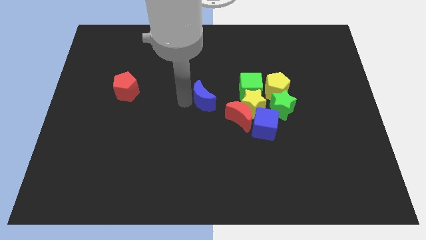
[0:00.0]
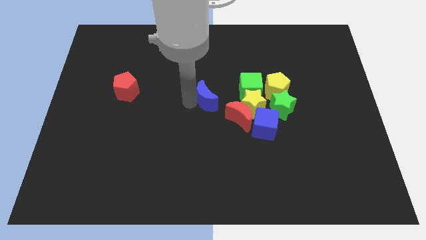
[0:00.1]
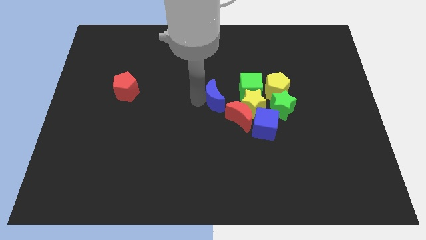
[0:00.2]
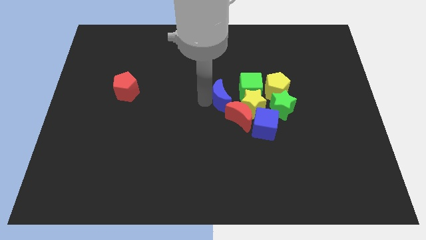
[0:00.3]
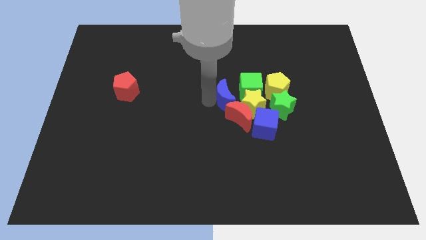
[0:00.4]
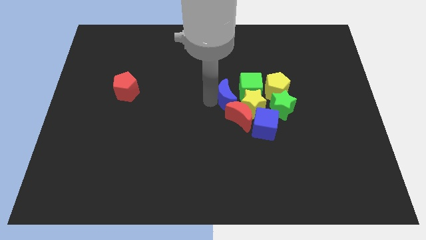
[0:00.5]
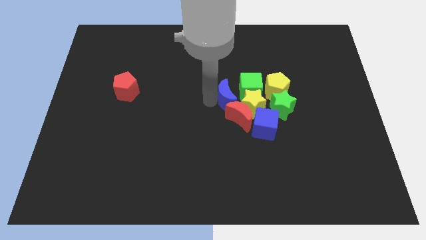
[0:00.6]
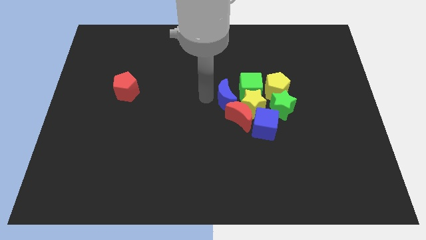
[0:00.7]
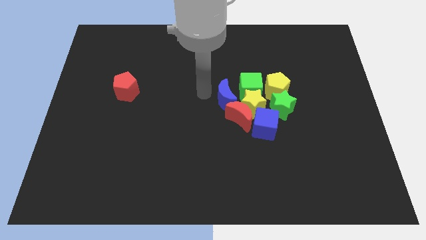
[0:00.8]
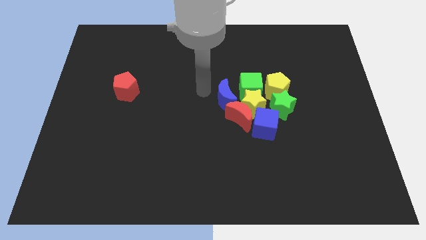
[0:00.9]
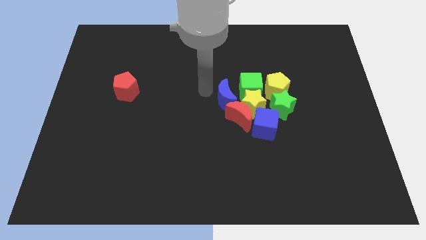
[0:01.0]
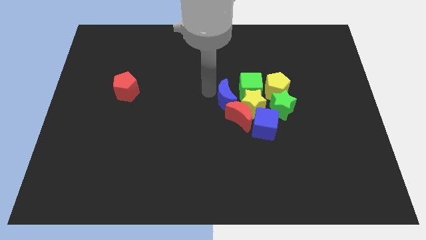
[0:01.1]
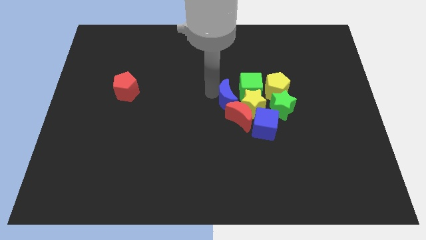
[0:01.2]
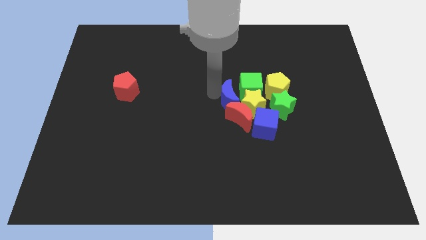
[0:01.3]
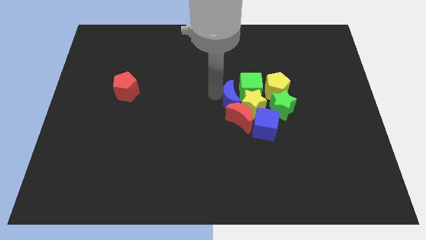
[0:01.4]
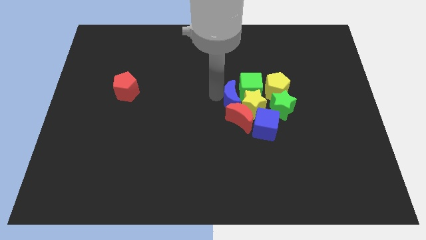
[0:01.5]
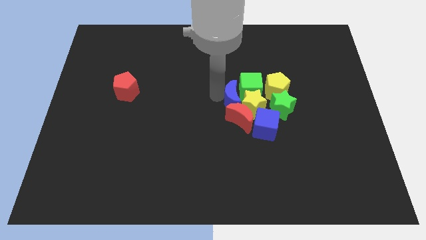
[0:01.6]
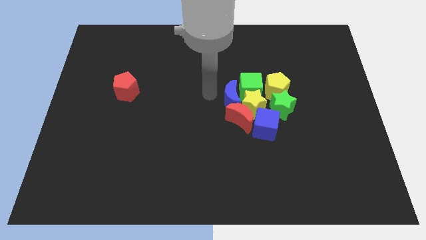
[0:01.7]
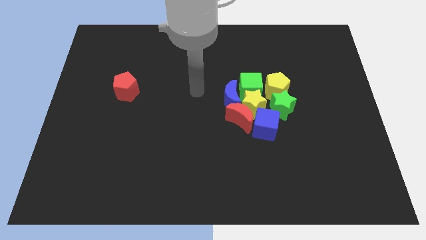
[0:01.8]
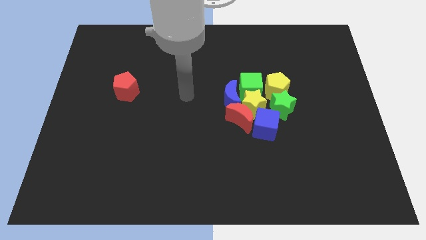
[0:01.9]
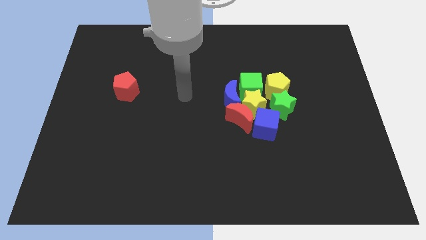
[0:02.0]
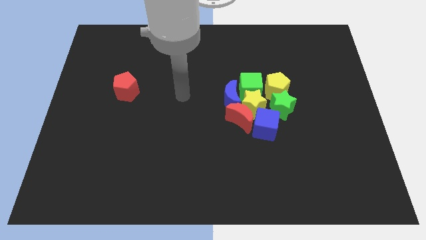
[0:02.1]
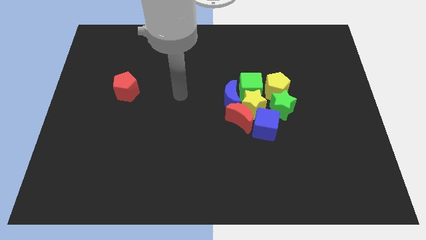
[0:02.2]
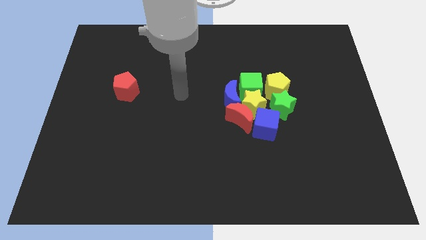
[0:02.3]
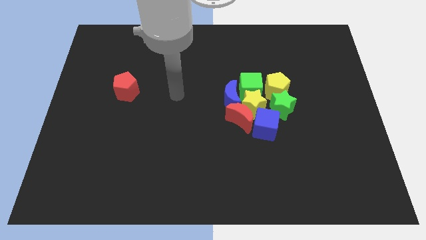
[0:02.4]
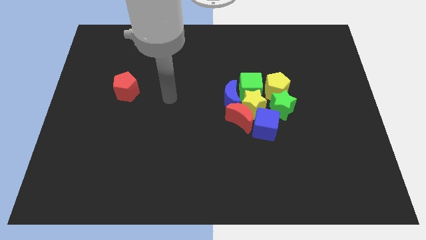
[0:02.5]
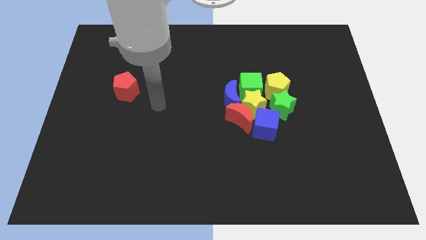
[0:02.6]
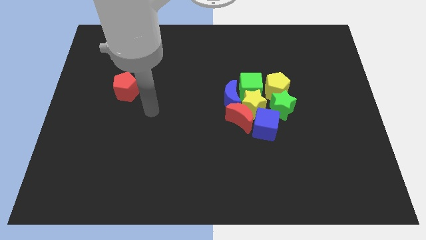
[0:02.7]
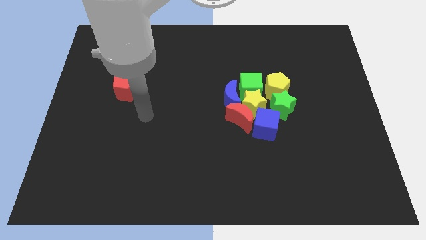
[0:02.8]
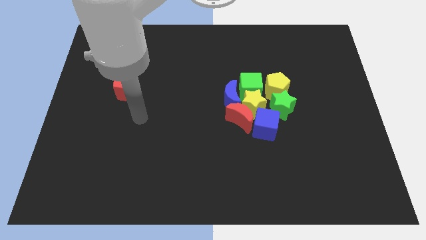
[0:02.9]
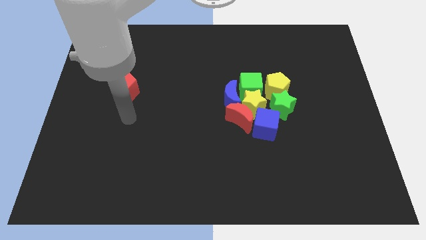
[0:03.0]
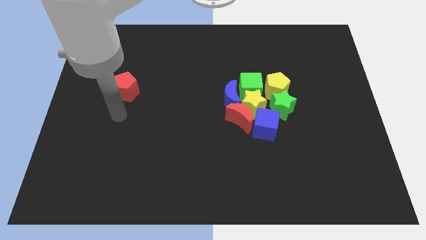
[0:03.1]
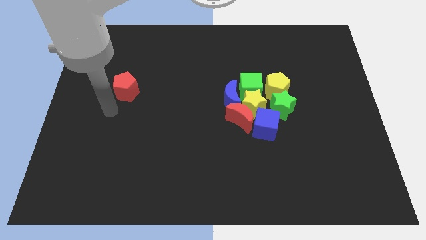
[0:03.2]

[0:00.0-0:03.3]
place blue crescent on top of red crescent

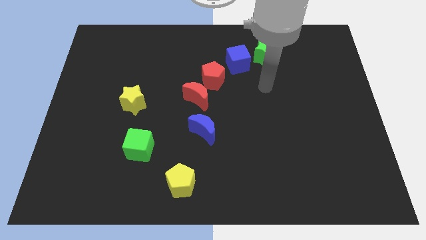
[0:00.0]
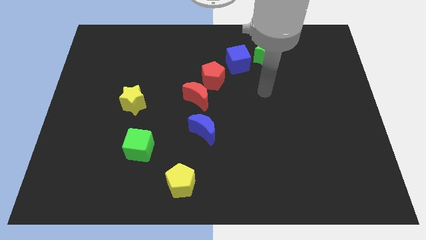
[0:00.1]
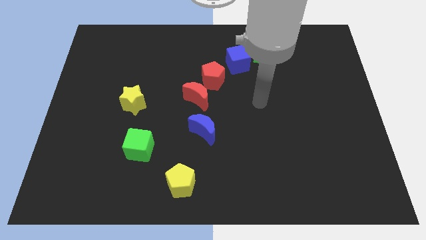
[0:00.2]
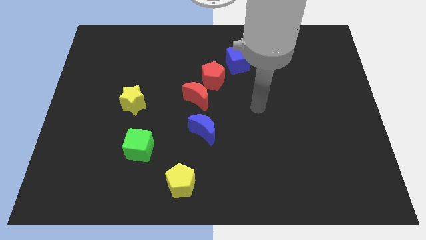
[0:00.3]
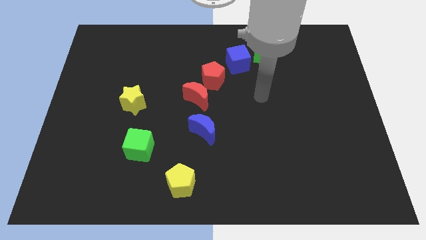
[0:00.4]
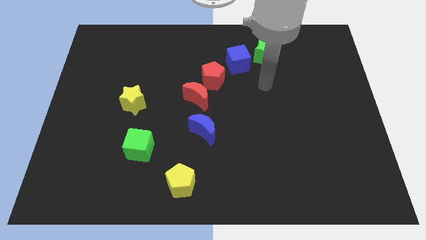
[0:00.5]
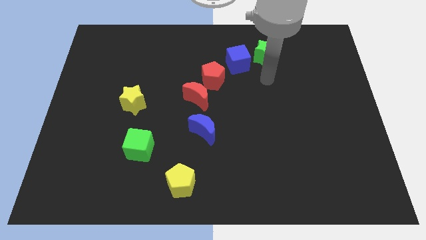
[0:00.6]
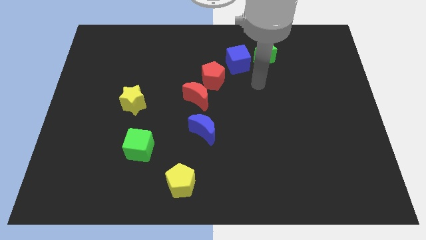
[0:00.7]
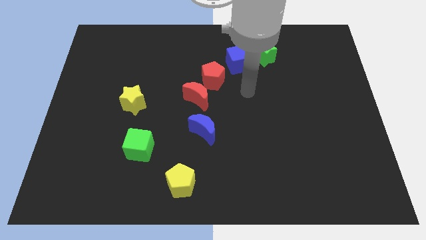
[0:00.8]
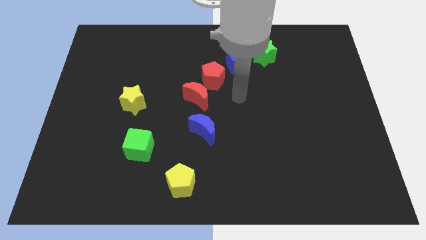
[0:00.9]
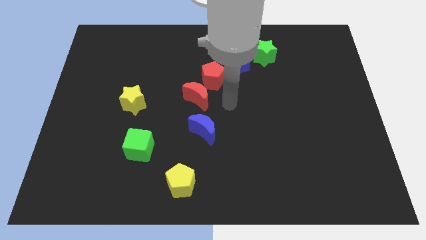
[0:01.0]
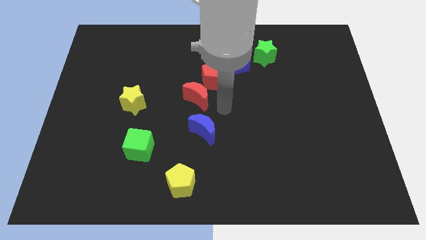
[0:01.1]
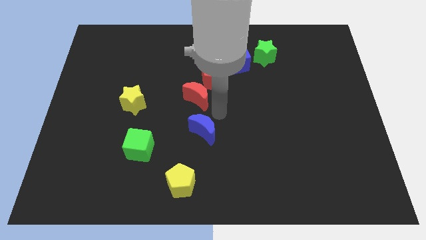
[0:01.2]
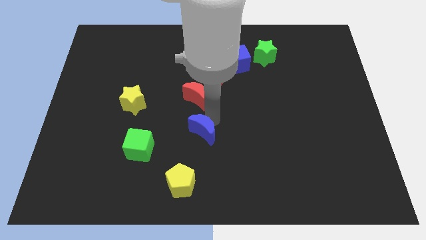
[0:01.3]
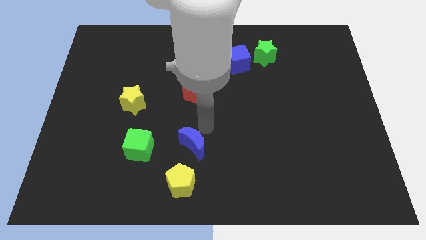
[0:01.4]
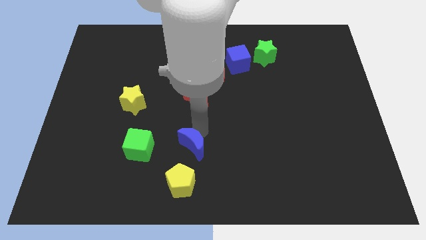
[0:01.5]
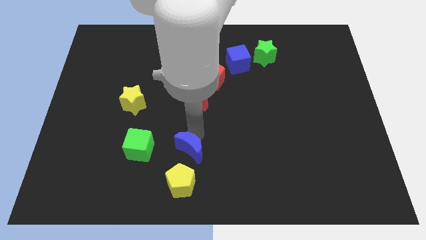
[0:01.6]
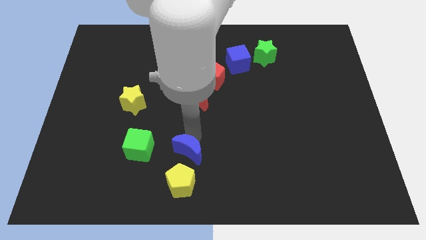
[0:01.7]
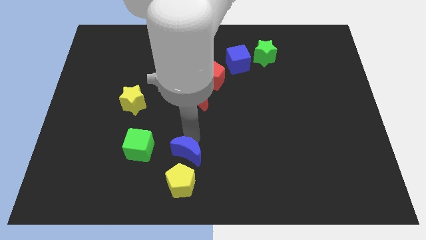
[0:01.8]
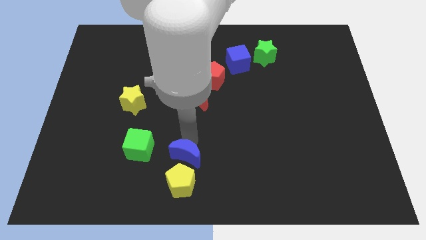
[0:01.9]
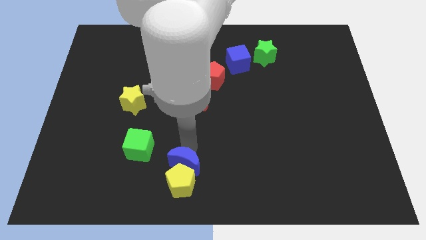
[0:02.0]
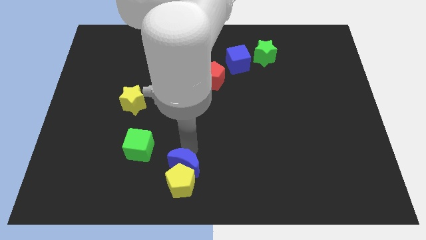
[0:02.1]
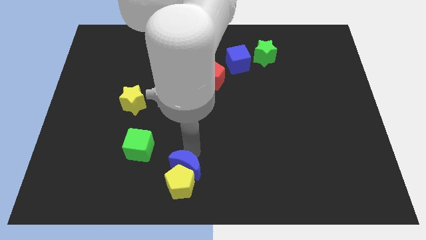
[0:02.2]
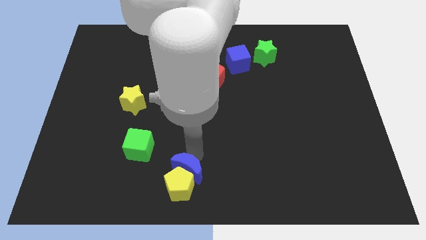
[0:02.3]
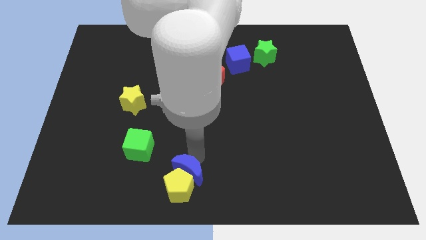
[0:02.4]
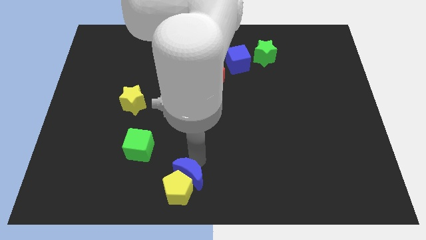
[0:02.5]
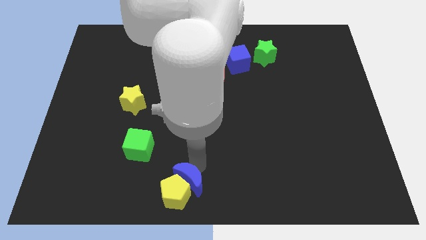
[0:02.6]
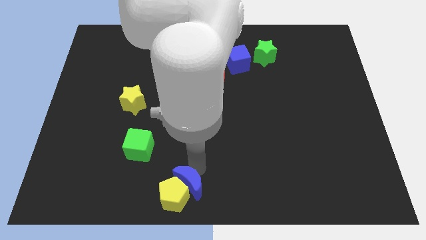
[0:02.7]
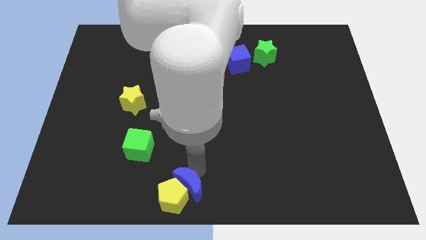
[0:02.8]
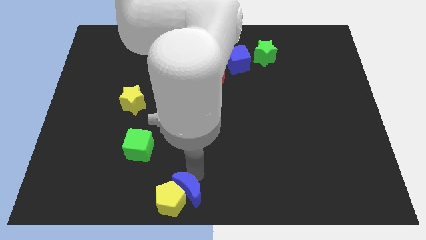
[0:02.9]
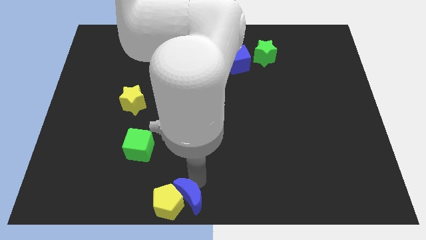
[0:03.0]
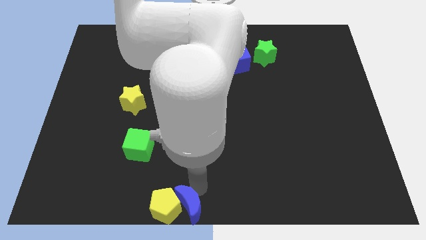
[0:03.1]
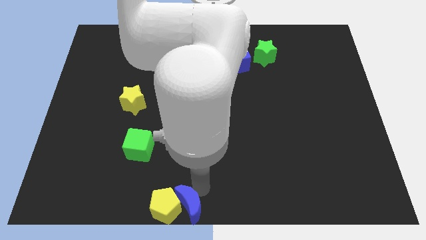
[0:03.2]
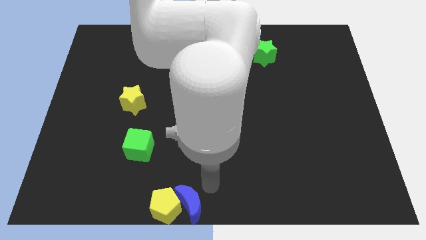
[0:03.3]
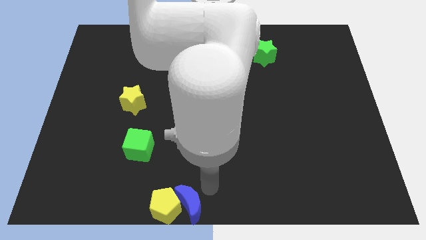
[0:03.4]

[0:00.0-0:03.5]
move blue crescent along with yellow pentagon towards bottom center

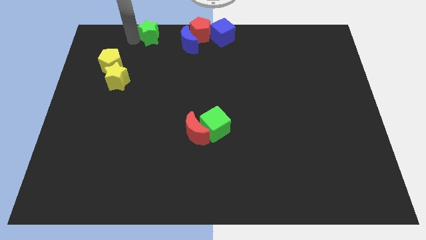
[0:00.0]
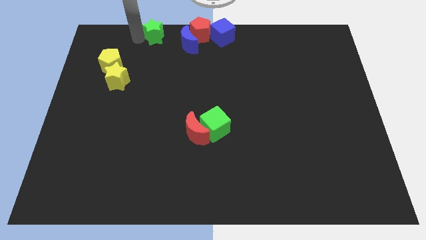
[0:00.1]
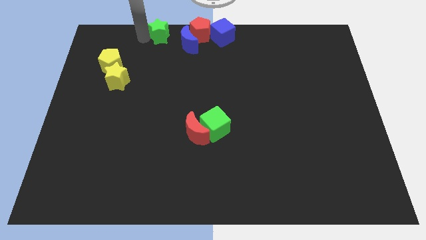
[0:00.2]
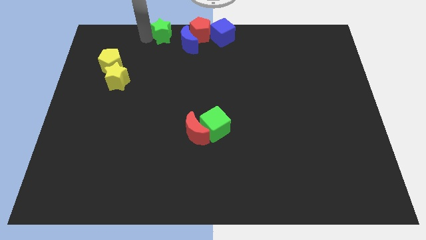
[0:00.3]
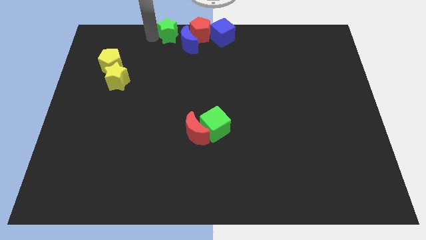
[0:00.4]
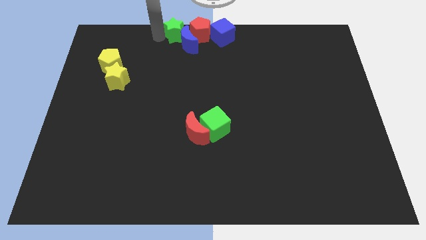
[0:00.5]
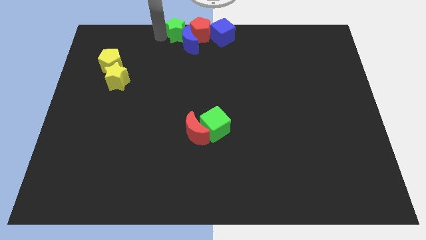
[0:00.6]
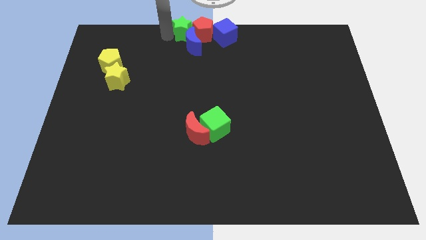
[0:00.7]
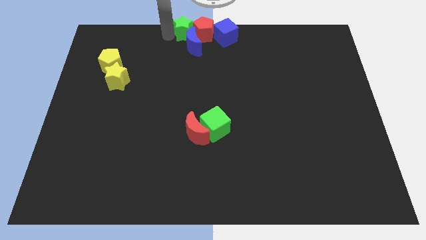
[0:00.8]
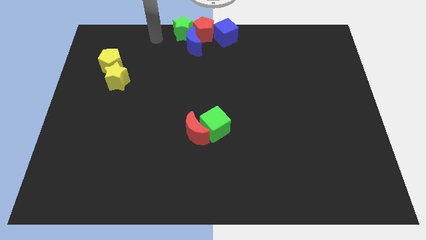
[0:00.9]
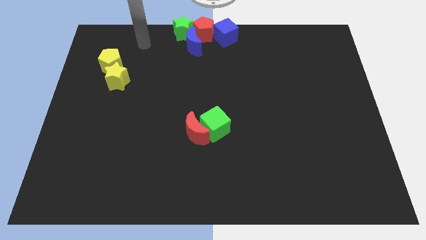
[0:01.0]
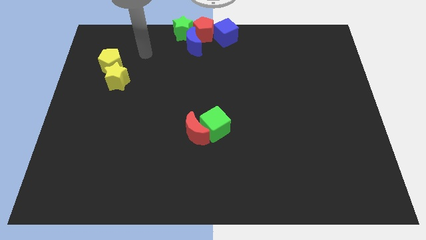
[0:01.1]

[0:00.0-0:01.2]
place the green star to the left of the red pentagon

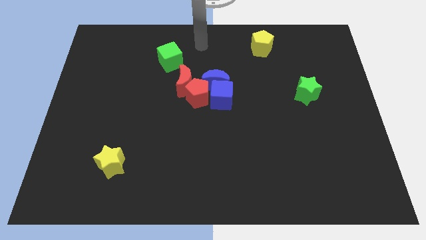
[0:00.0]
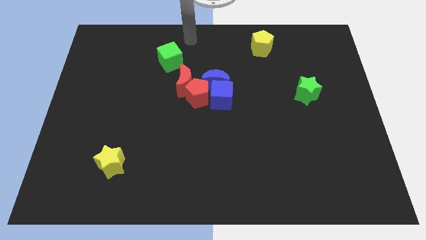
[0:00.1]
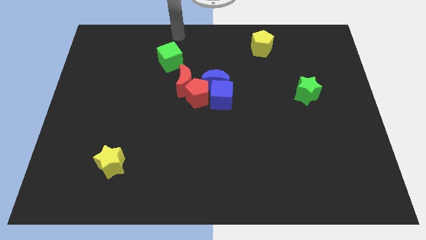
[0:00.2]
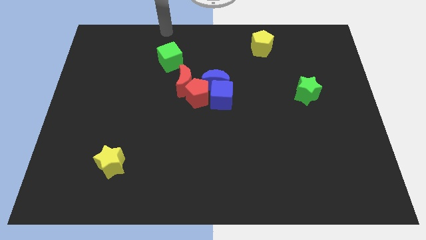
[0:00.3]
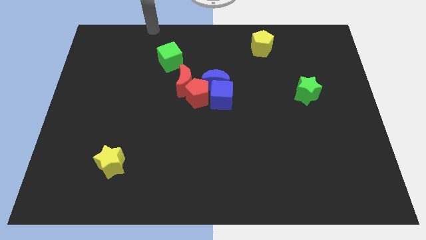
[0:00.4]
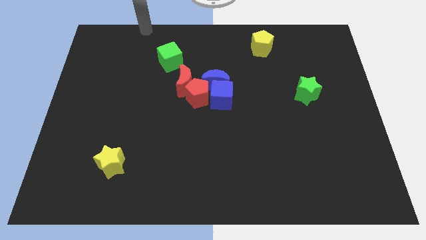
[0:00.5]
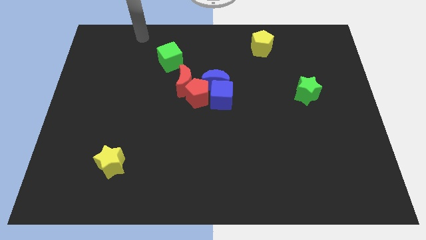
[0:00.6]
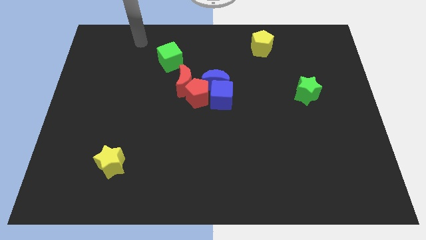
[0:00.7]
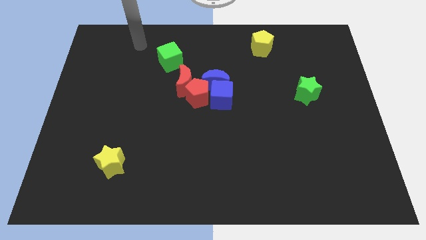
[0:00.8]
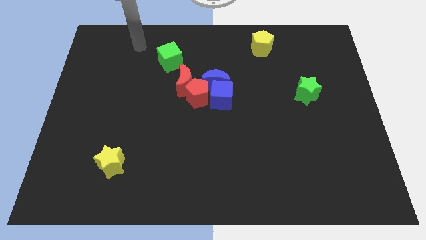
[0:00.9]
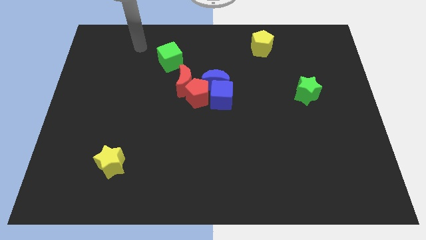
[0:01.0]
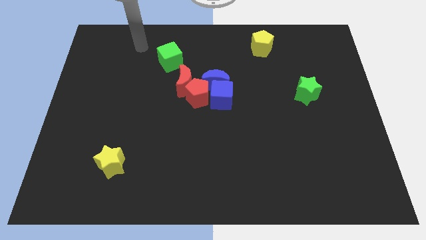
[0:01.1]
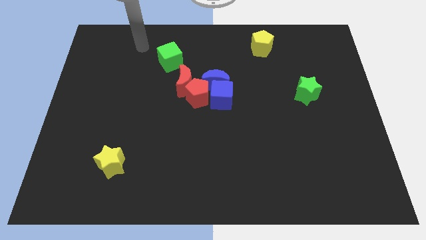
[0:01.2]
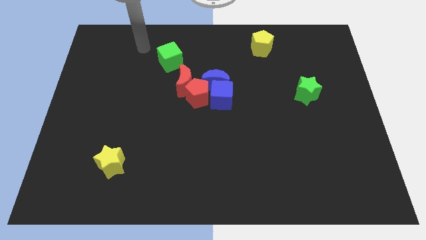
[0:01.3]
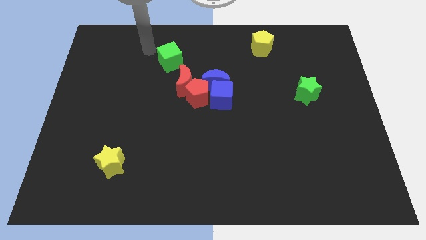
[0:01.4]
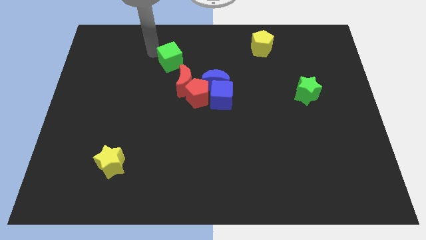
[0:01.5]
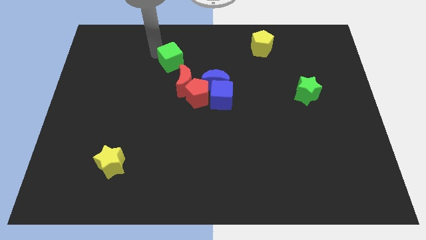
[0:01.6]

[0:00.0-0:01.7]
place your arm above green cube
